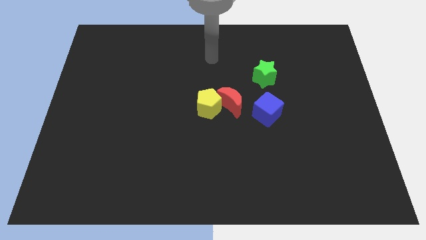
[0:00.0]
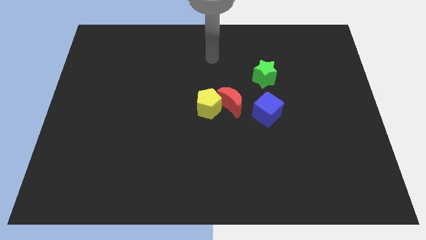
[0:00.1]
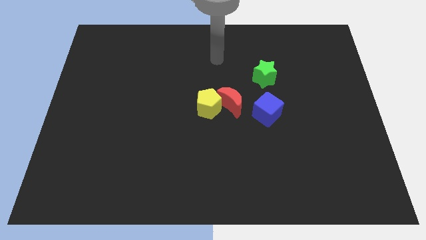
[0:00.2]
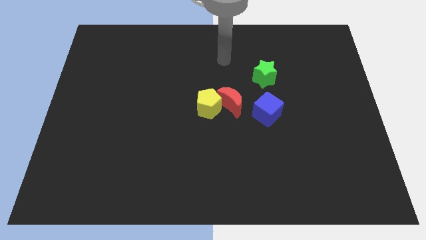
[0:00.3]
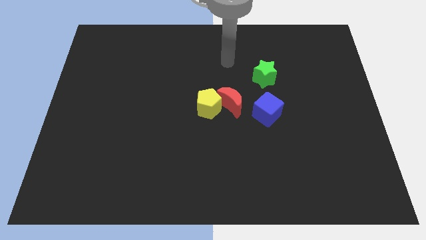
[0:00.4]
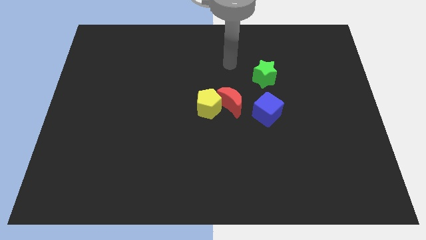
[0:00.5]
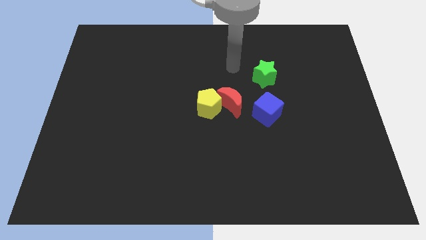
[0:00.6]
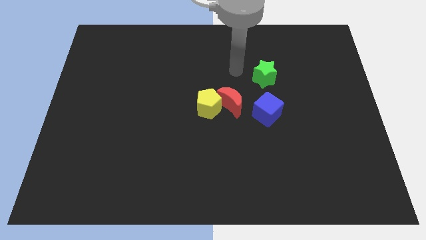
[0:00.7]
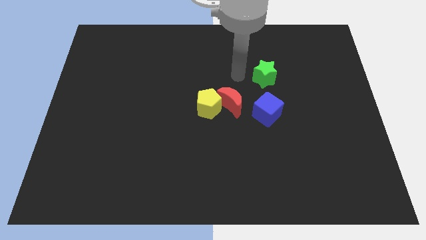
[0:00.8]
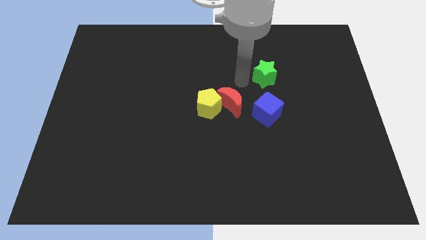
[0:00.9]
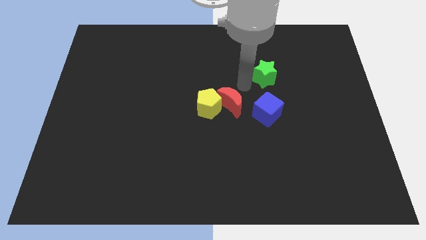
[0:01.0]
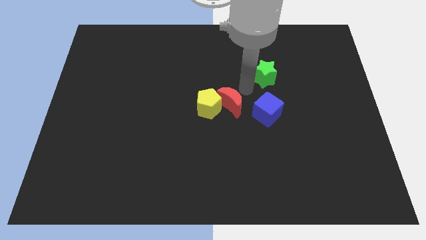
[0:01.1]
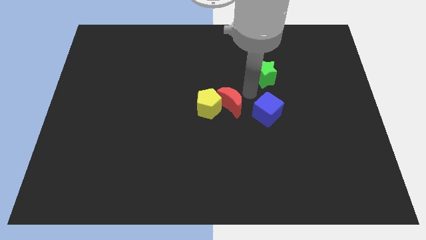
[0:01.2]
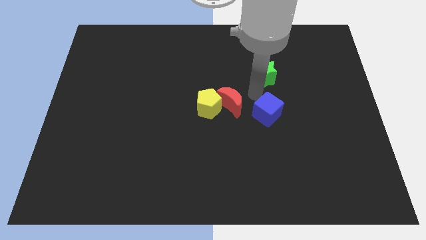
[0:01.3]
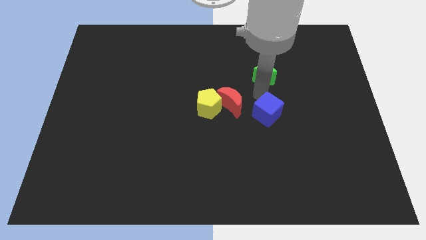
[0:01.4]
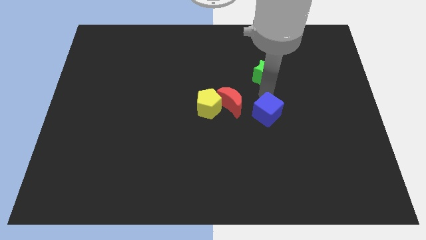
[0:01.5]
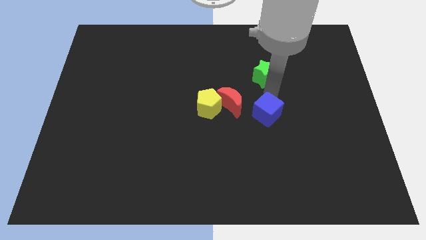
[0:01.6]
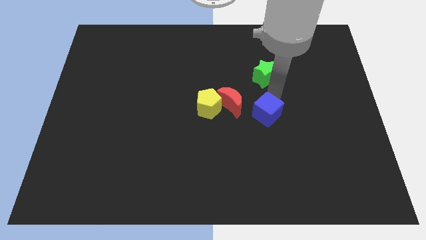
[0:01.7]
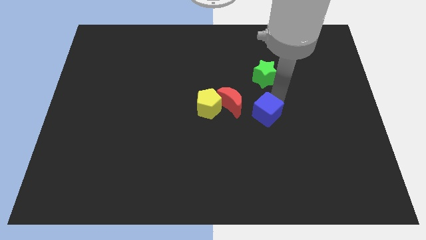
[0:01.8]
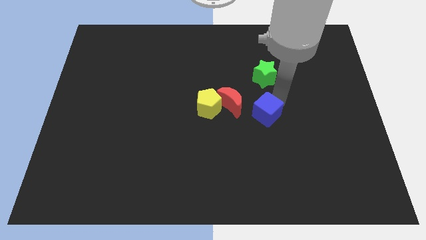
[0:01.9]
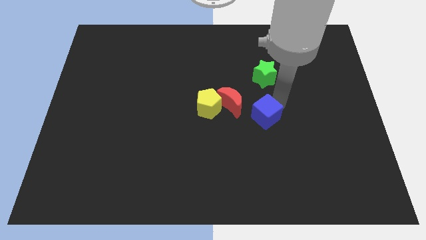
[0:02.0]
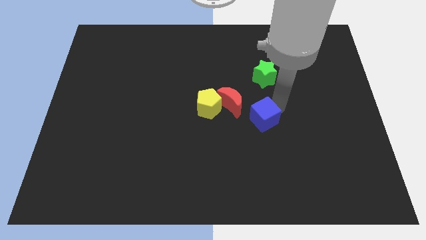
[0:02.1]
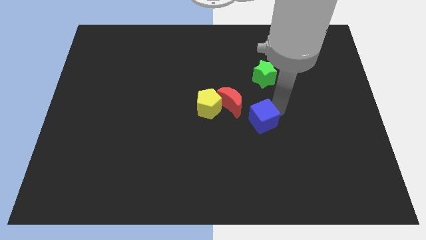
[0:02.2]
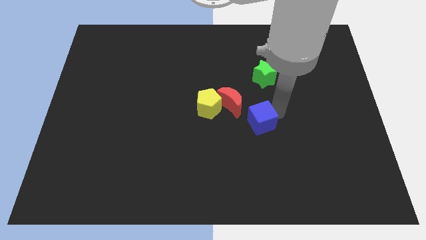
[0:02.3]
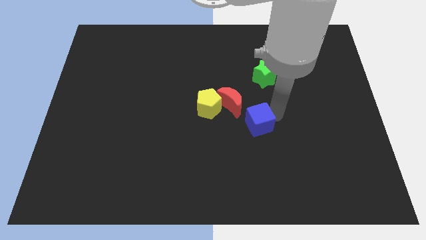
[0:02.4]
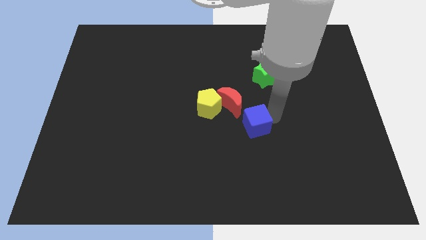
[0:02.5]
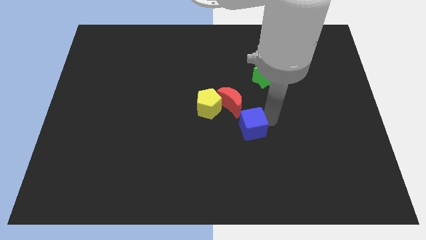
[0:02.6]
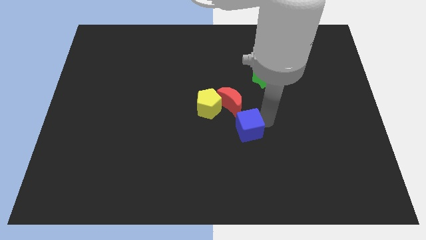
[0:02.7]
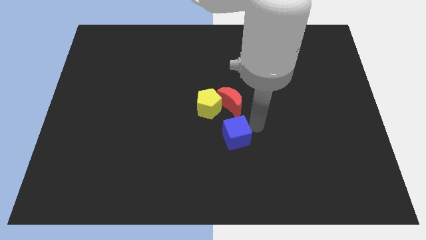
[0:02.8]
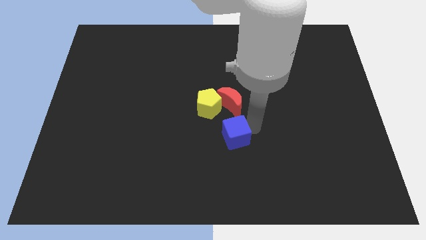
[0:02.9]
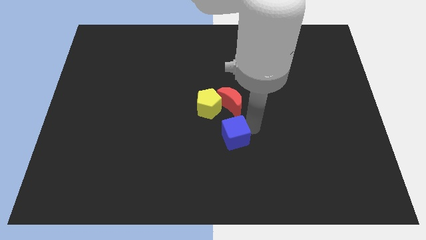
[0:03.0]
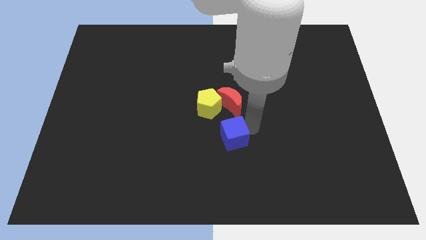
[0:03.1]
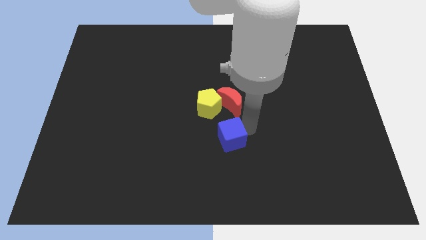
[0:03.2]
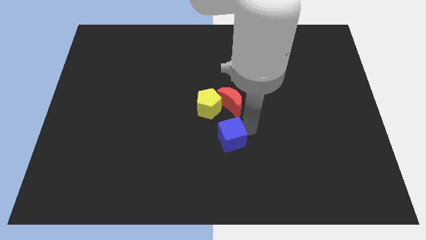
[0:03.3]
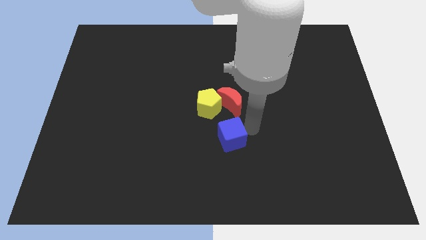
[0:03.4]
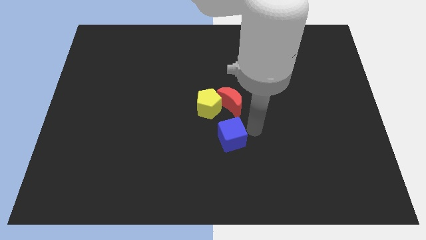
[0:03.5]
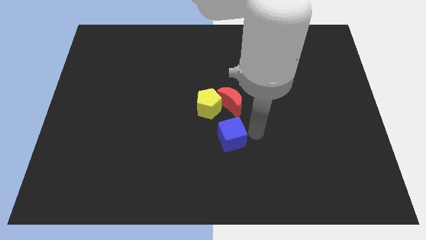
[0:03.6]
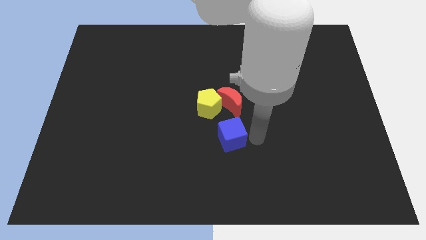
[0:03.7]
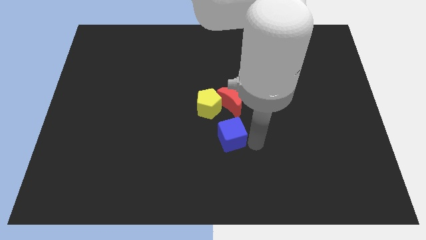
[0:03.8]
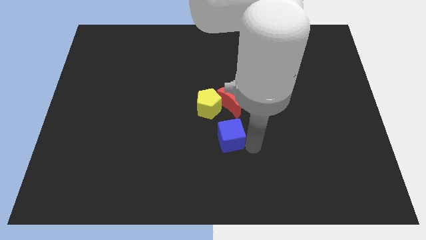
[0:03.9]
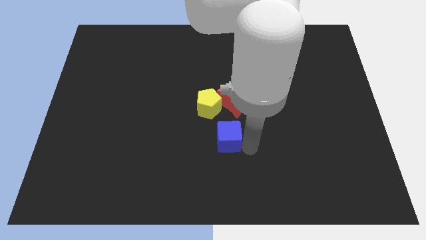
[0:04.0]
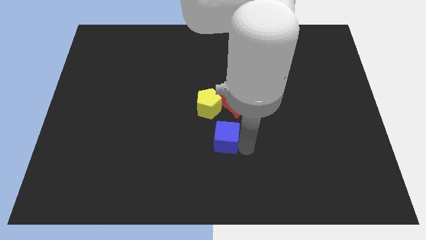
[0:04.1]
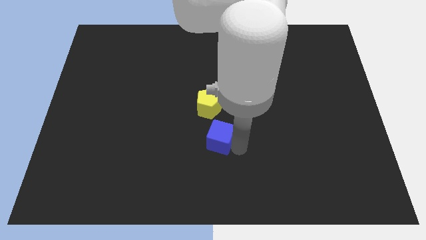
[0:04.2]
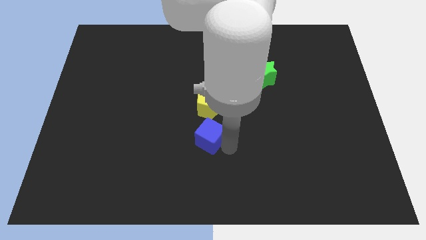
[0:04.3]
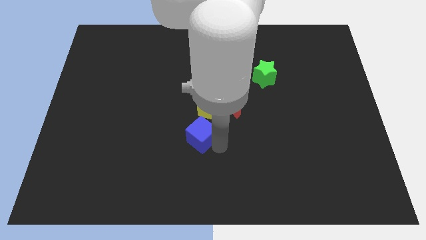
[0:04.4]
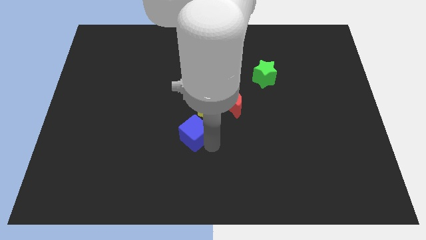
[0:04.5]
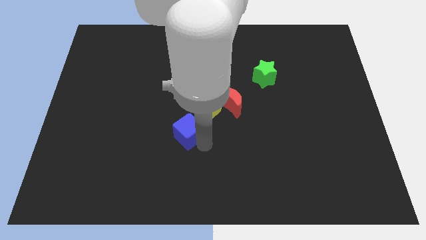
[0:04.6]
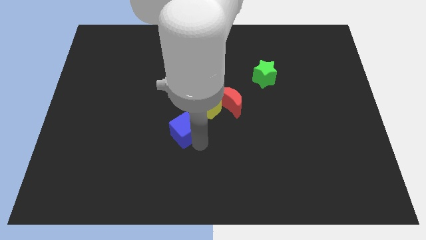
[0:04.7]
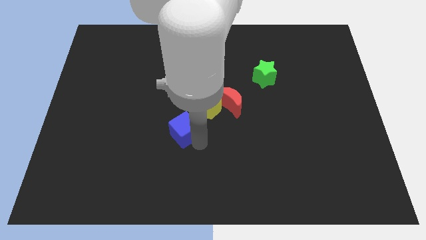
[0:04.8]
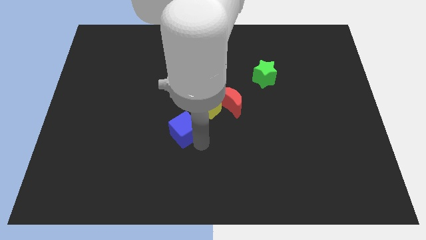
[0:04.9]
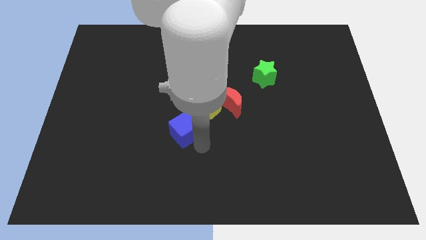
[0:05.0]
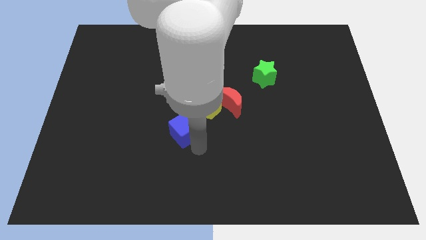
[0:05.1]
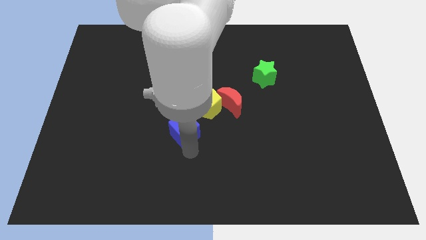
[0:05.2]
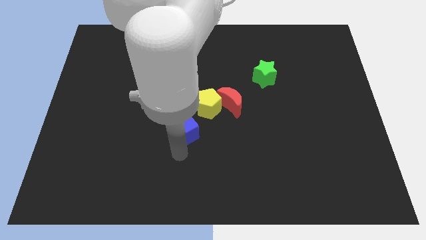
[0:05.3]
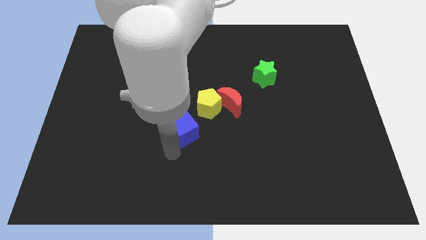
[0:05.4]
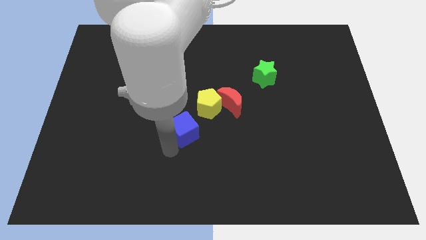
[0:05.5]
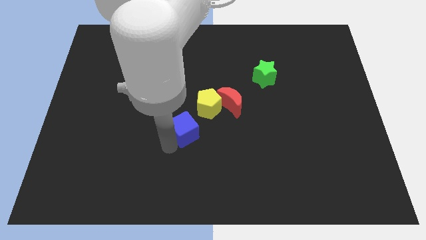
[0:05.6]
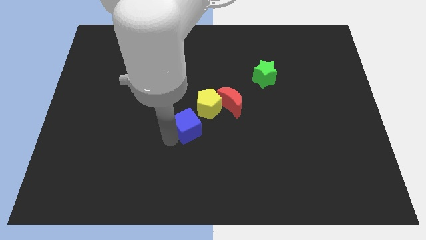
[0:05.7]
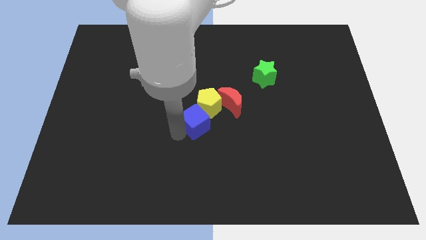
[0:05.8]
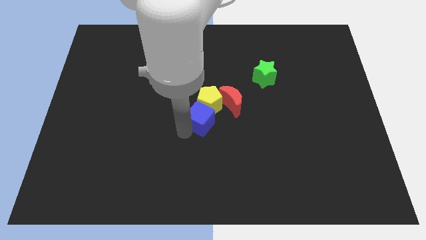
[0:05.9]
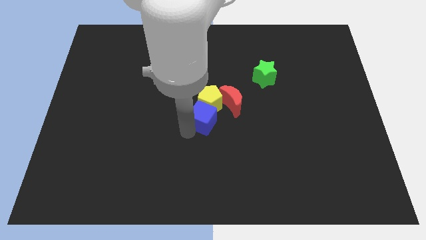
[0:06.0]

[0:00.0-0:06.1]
put the cube to the yellow block

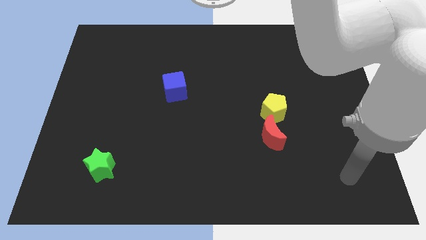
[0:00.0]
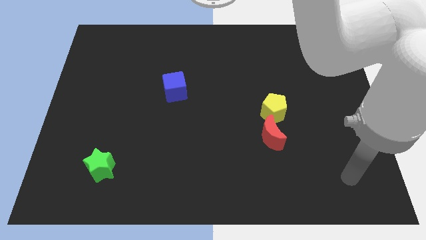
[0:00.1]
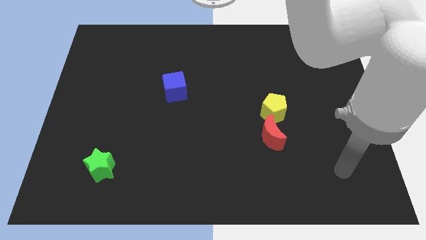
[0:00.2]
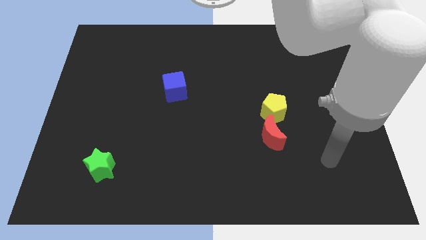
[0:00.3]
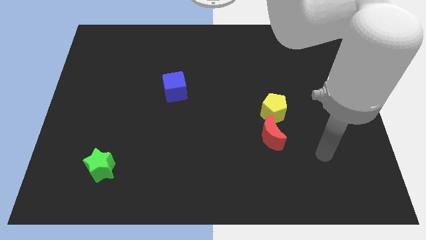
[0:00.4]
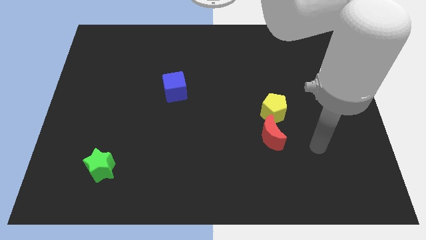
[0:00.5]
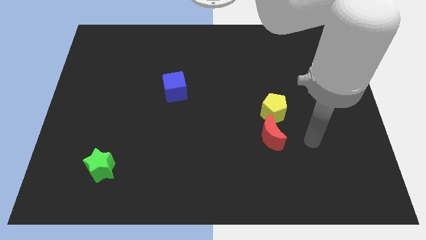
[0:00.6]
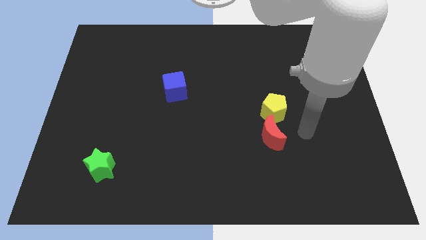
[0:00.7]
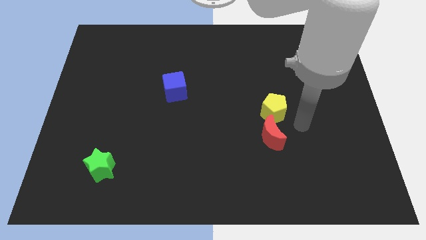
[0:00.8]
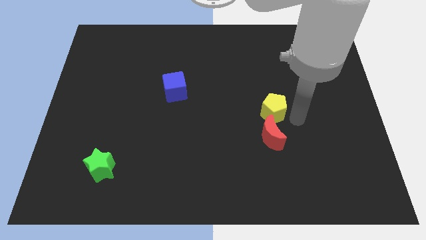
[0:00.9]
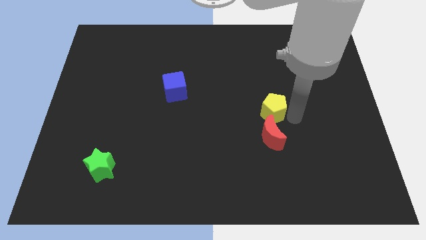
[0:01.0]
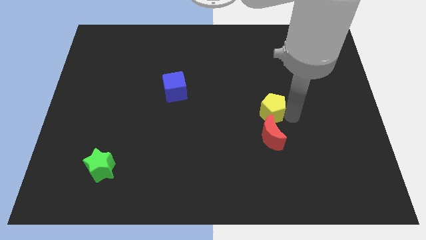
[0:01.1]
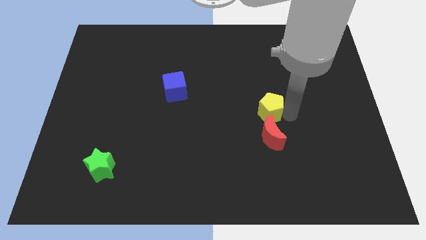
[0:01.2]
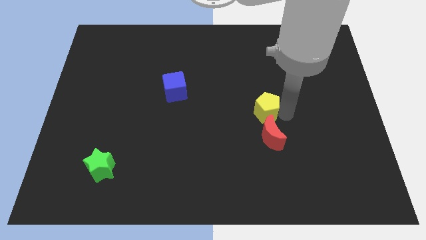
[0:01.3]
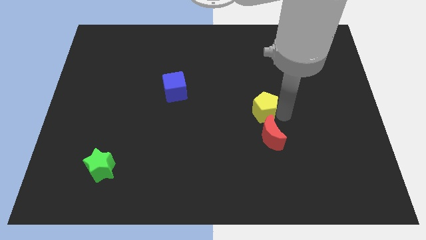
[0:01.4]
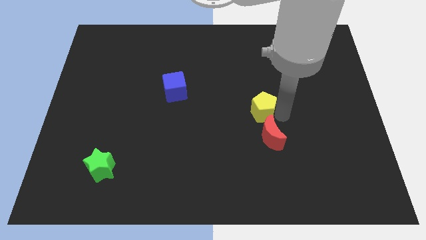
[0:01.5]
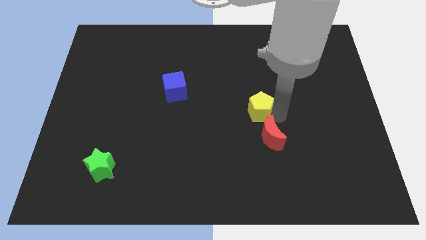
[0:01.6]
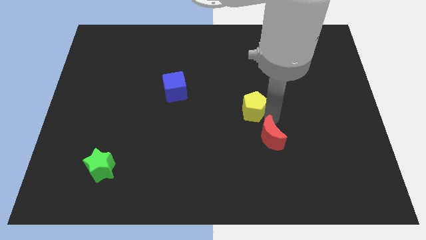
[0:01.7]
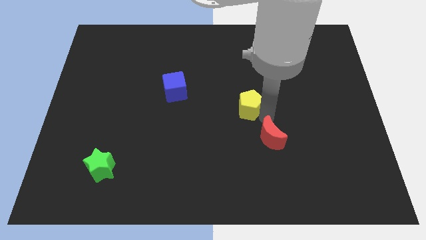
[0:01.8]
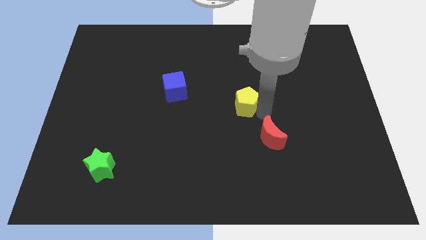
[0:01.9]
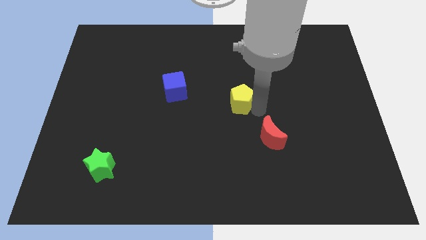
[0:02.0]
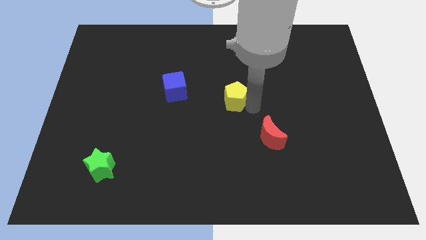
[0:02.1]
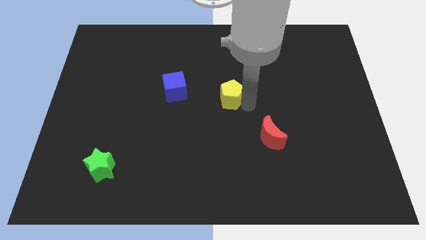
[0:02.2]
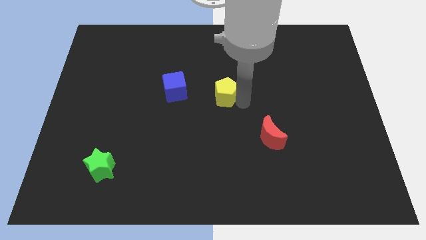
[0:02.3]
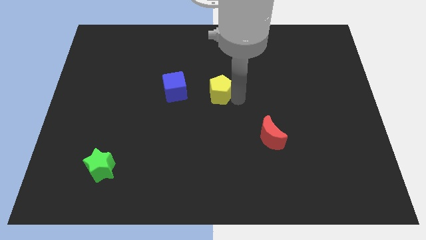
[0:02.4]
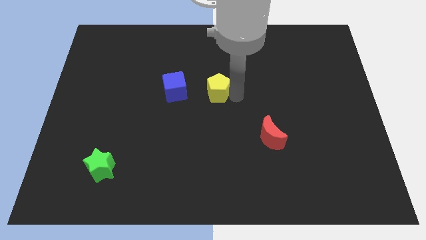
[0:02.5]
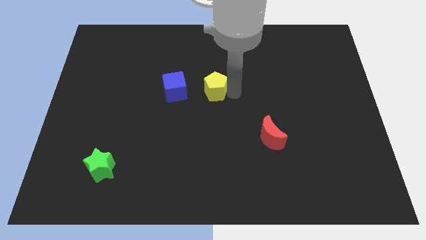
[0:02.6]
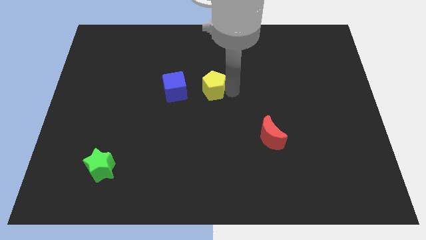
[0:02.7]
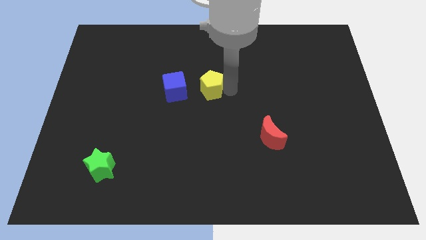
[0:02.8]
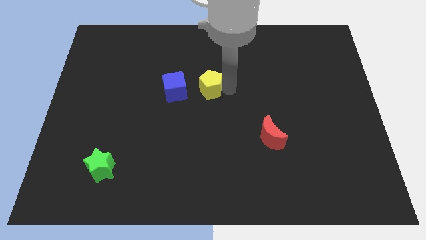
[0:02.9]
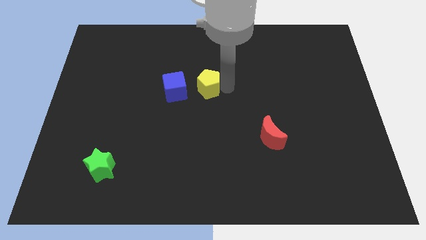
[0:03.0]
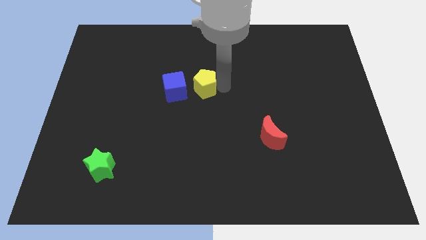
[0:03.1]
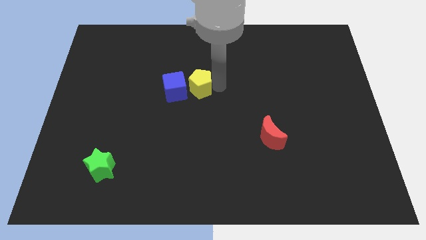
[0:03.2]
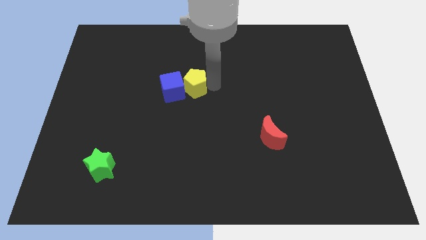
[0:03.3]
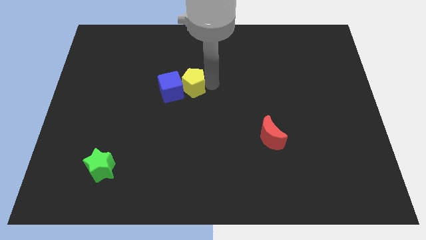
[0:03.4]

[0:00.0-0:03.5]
slide the yellow block next to the blue cube
